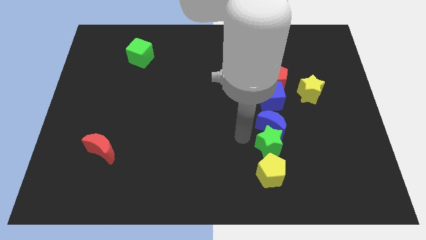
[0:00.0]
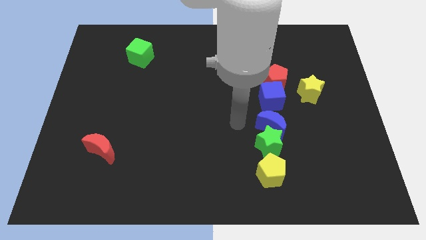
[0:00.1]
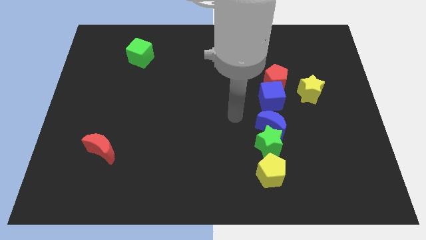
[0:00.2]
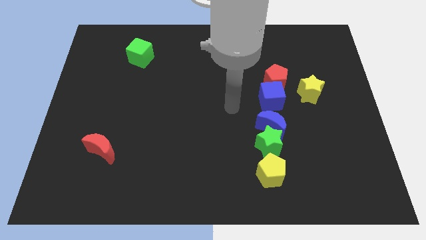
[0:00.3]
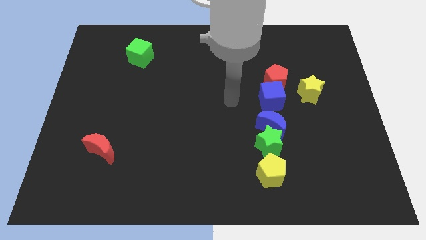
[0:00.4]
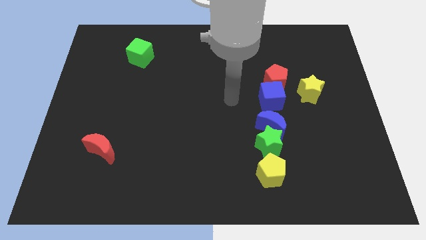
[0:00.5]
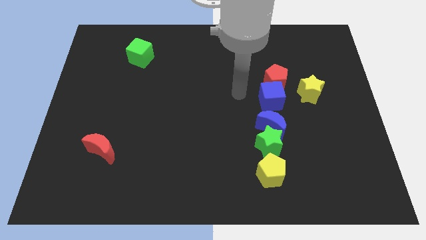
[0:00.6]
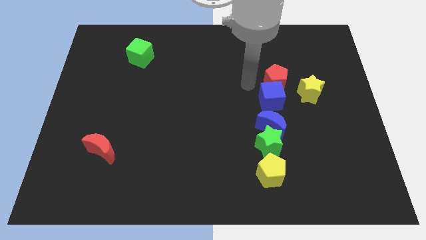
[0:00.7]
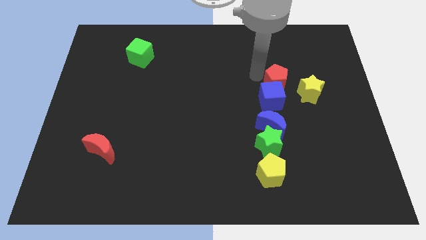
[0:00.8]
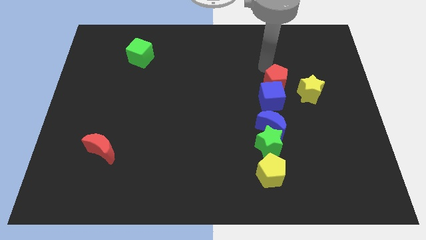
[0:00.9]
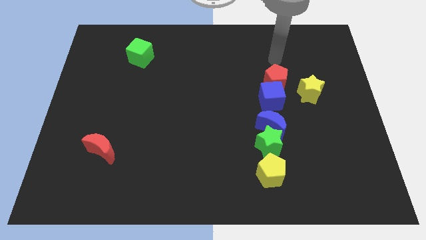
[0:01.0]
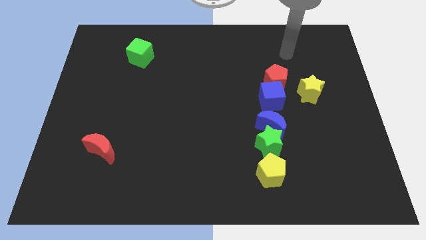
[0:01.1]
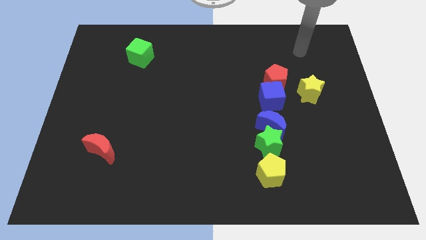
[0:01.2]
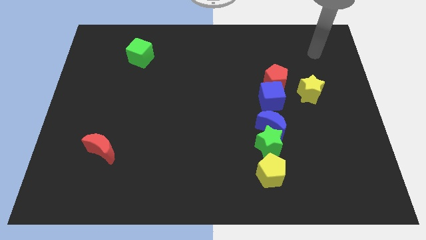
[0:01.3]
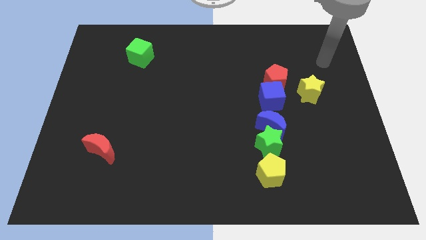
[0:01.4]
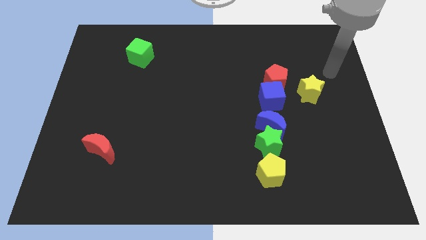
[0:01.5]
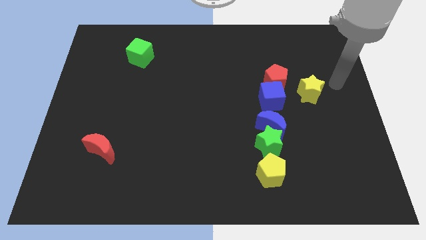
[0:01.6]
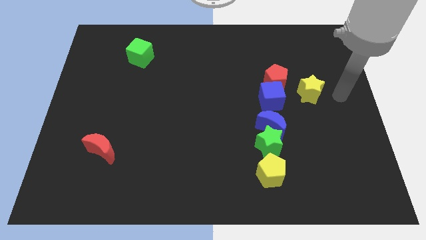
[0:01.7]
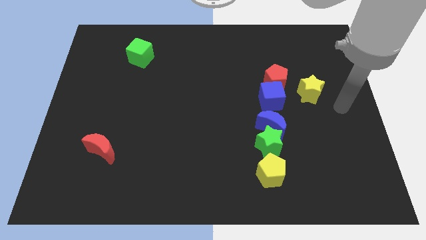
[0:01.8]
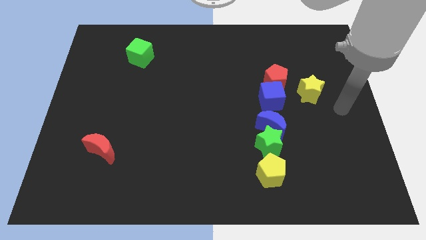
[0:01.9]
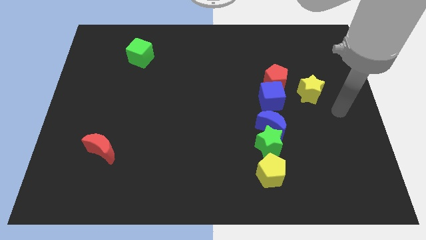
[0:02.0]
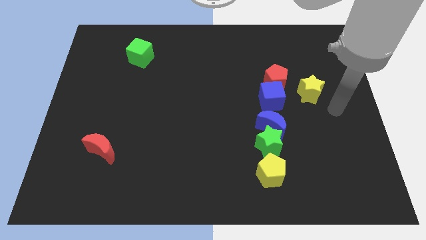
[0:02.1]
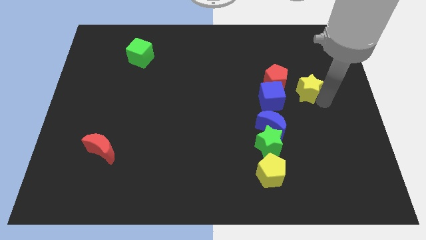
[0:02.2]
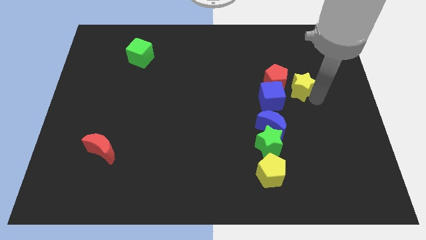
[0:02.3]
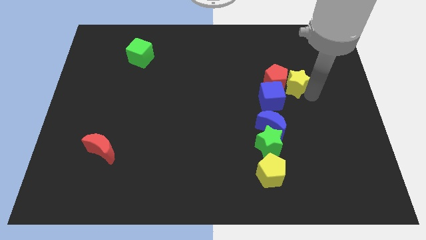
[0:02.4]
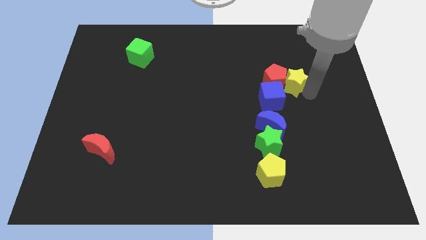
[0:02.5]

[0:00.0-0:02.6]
push the yellow star into the red pentagon

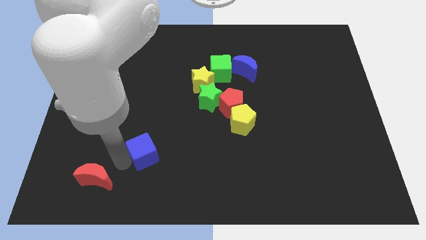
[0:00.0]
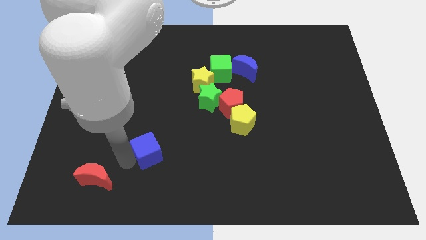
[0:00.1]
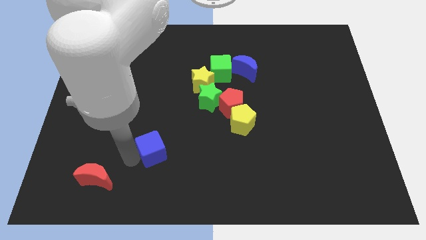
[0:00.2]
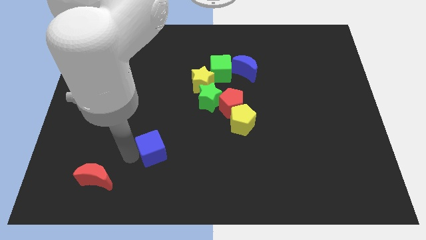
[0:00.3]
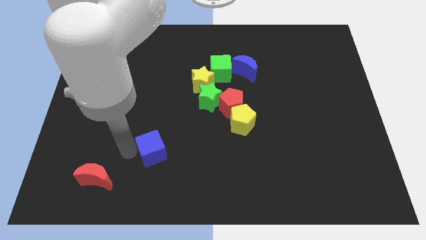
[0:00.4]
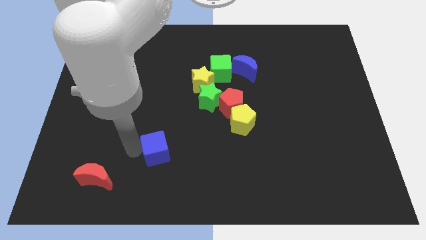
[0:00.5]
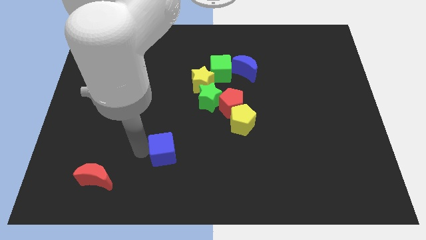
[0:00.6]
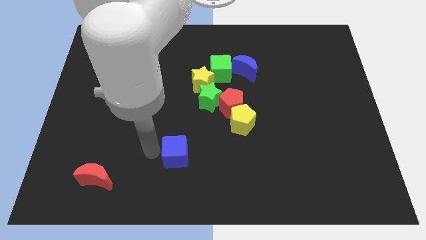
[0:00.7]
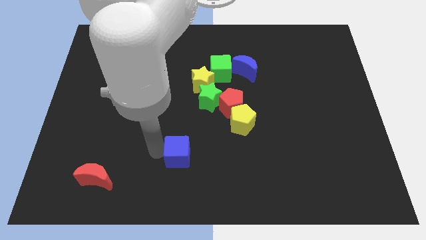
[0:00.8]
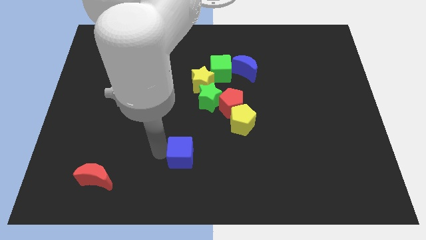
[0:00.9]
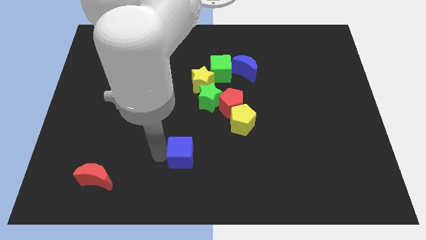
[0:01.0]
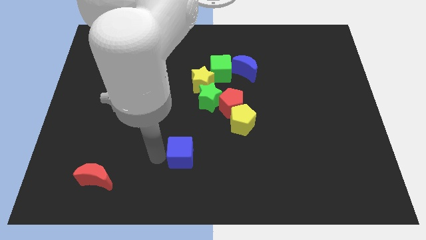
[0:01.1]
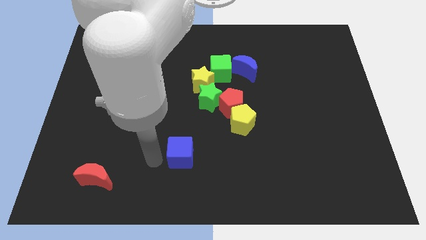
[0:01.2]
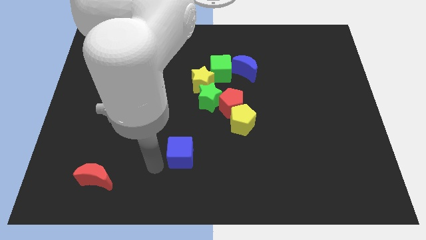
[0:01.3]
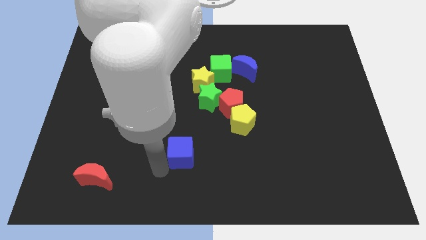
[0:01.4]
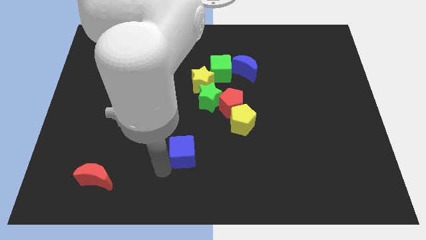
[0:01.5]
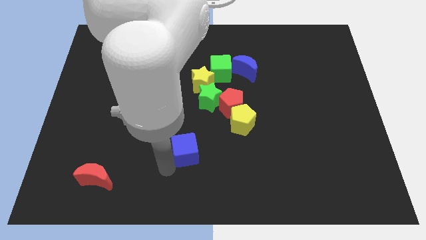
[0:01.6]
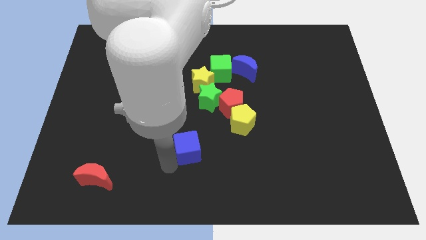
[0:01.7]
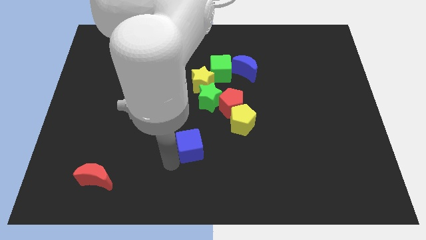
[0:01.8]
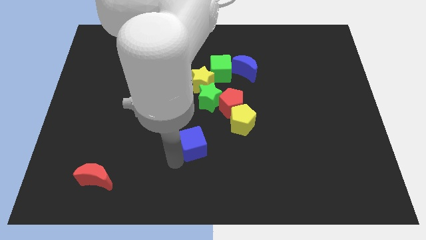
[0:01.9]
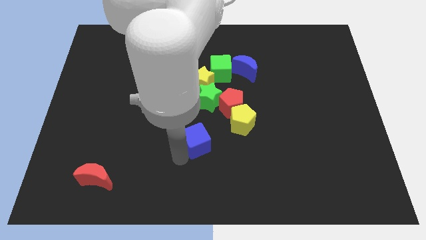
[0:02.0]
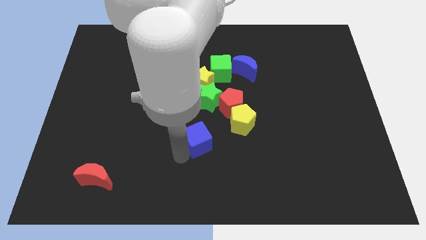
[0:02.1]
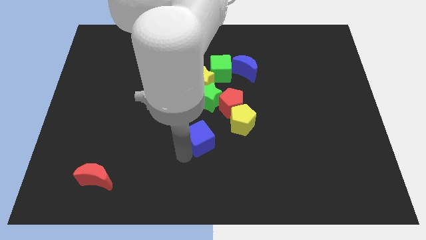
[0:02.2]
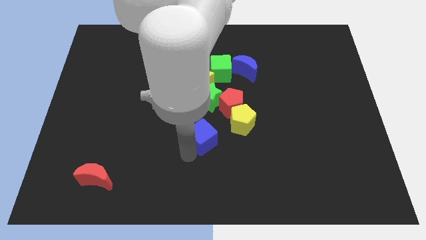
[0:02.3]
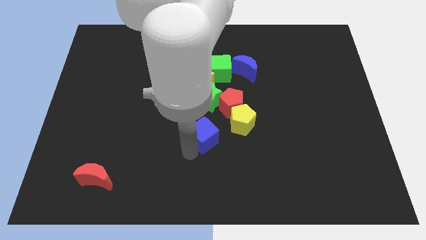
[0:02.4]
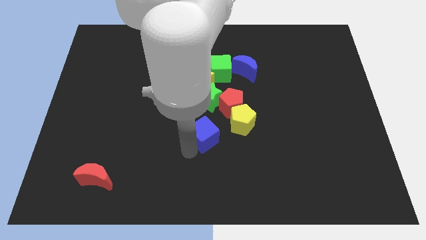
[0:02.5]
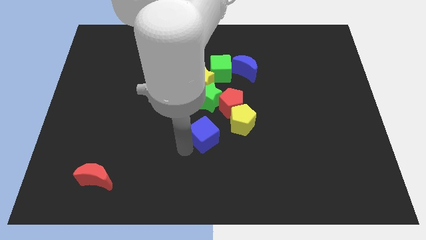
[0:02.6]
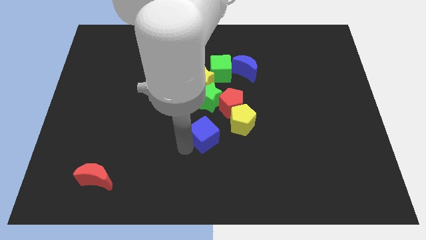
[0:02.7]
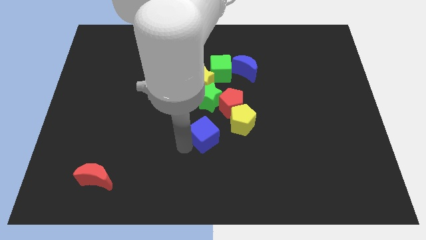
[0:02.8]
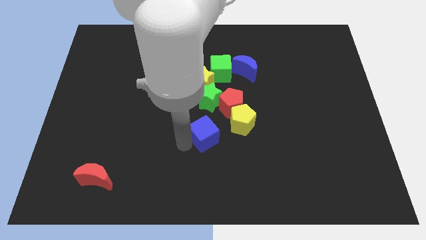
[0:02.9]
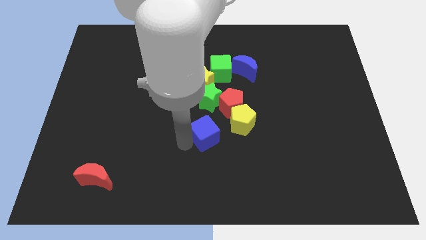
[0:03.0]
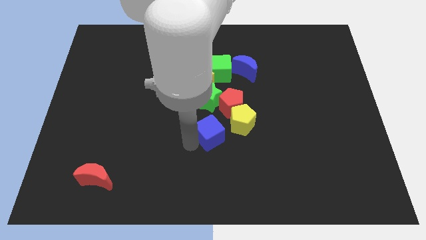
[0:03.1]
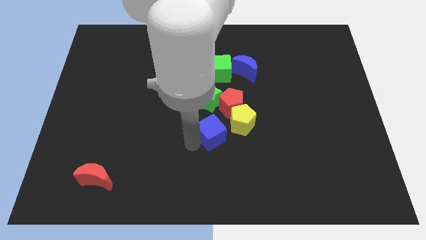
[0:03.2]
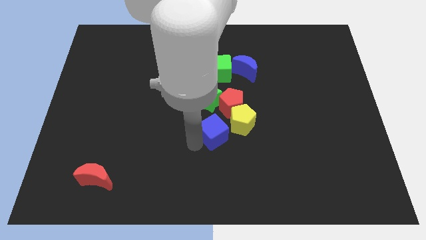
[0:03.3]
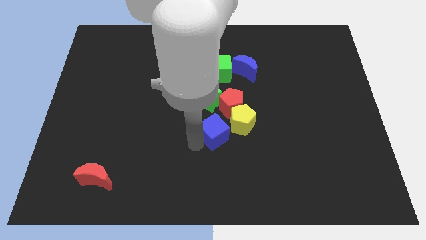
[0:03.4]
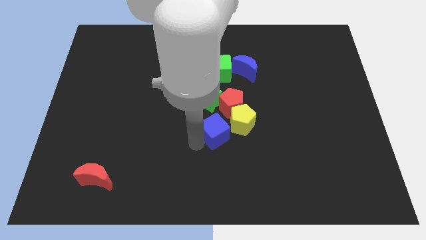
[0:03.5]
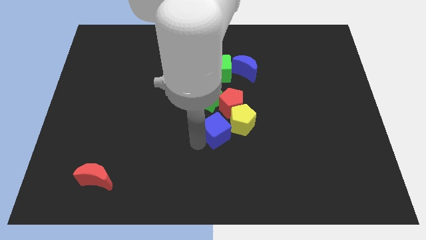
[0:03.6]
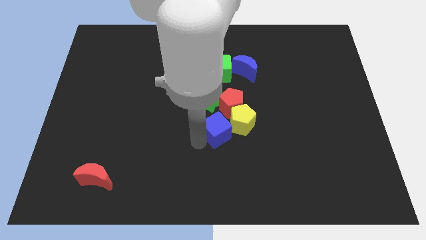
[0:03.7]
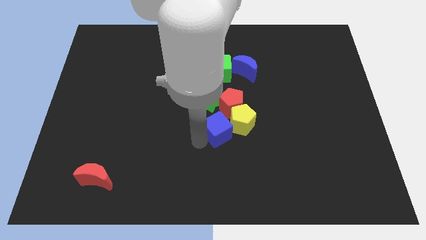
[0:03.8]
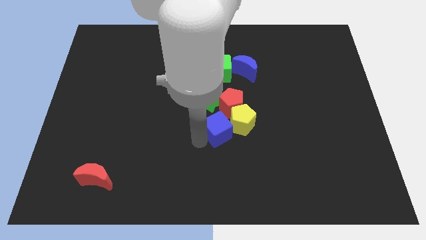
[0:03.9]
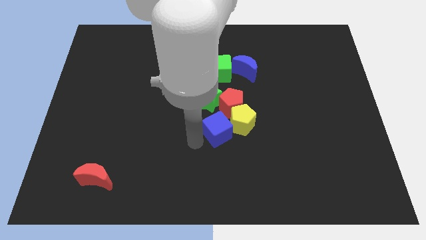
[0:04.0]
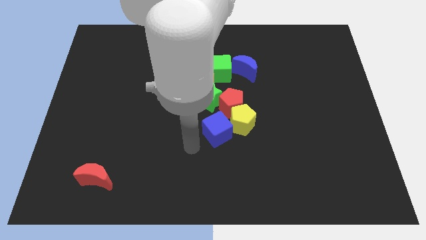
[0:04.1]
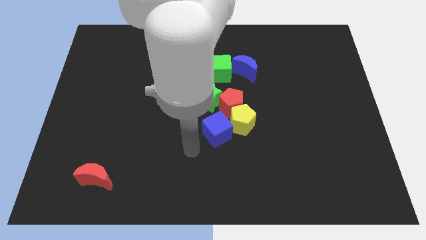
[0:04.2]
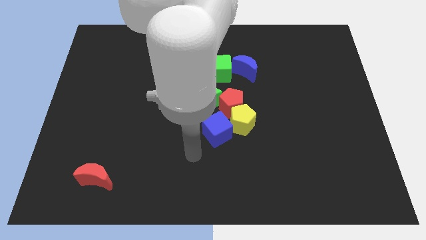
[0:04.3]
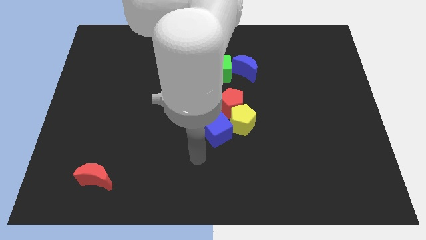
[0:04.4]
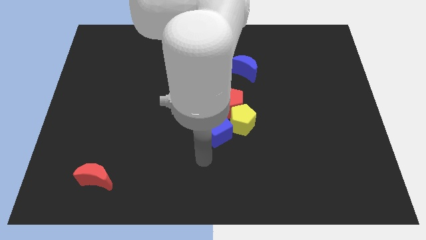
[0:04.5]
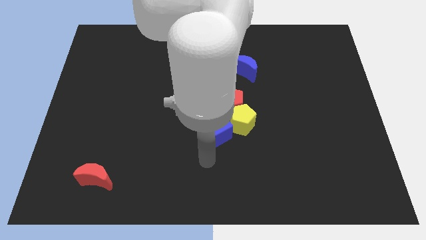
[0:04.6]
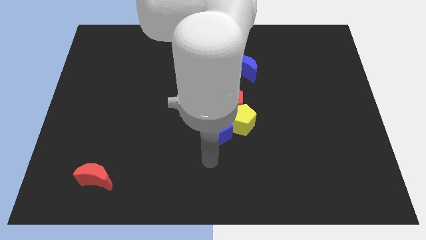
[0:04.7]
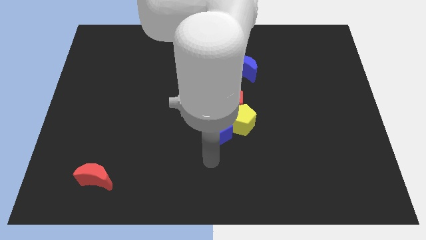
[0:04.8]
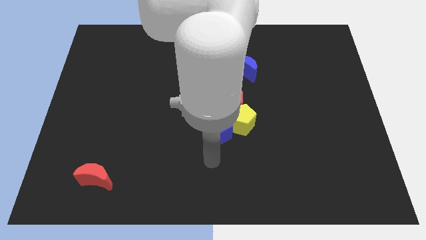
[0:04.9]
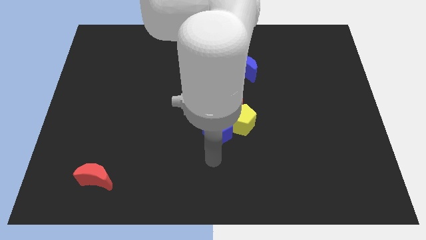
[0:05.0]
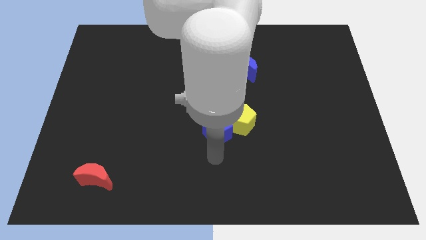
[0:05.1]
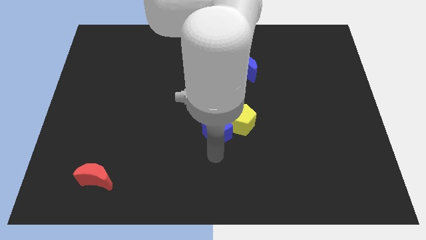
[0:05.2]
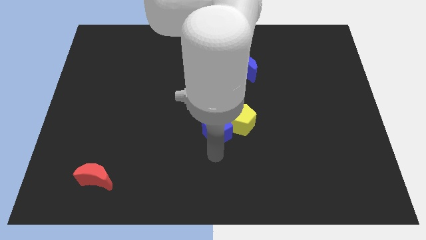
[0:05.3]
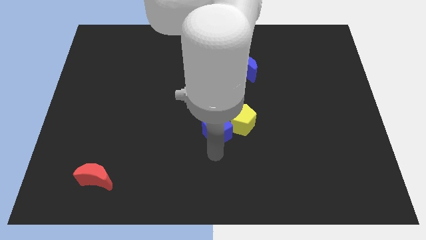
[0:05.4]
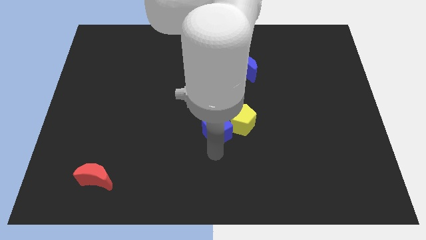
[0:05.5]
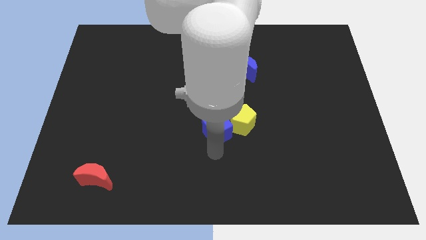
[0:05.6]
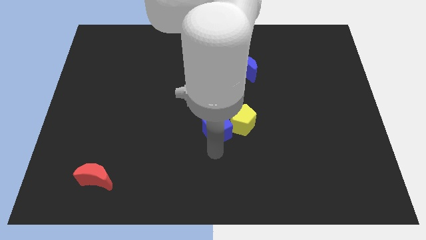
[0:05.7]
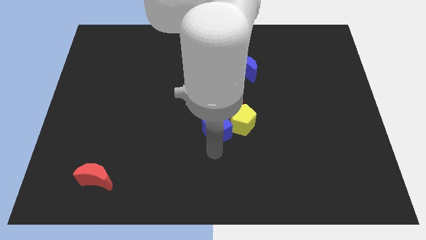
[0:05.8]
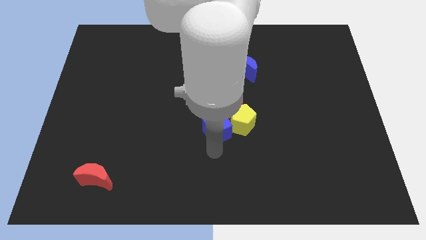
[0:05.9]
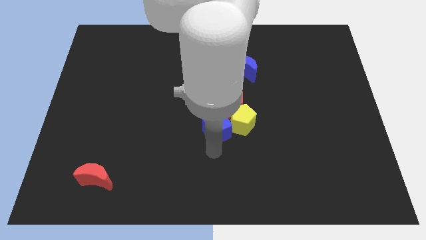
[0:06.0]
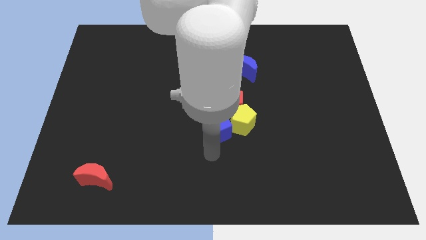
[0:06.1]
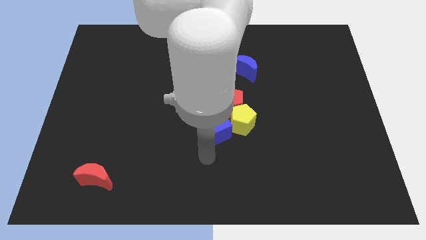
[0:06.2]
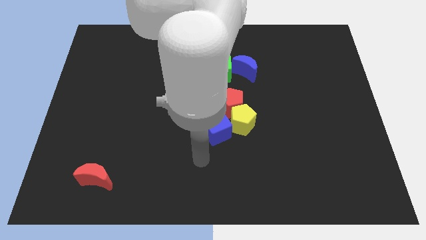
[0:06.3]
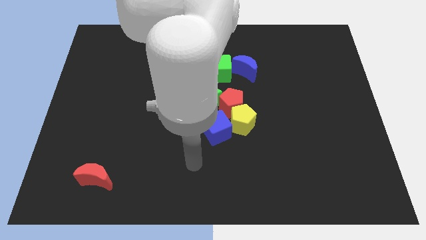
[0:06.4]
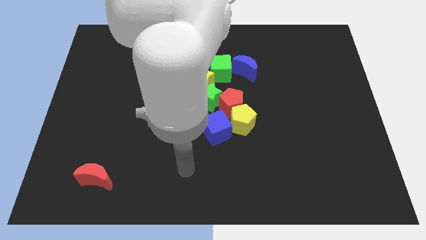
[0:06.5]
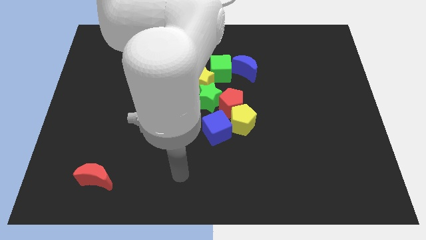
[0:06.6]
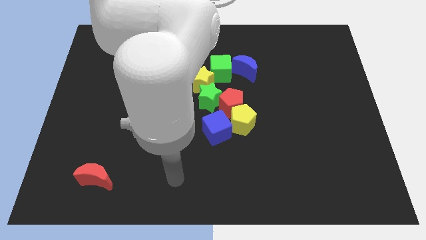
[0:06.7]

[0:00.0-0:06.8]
move the blue cube into the yellow pentagon
